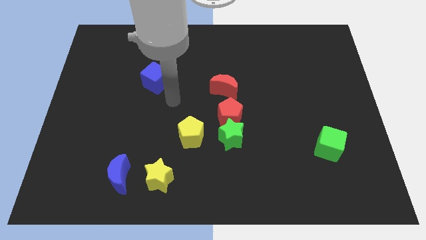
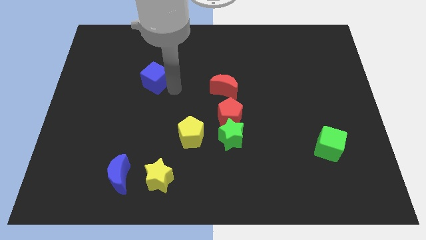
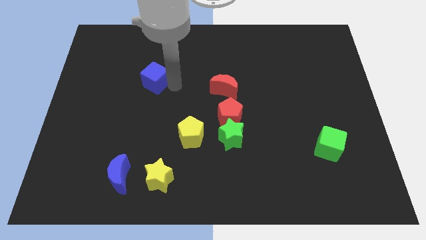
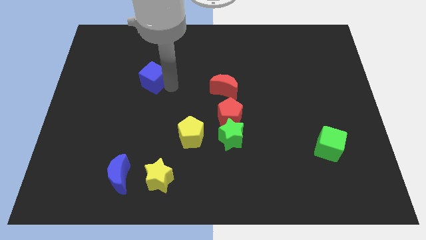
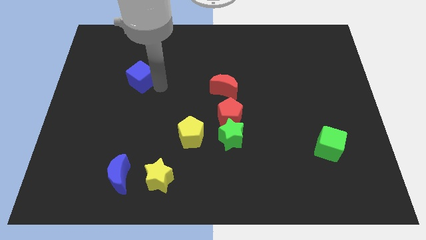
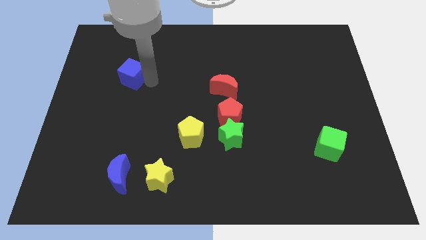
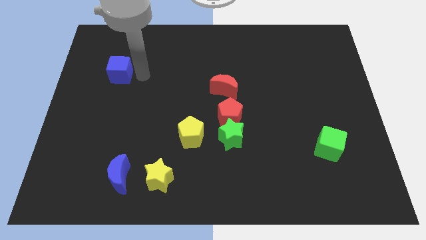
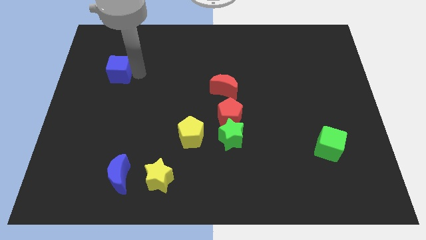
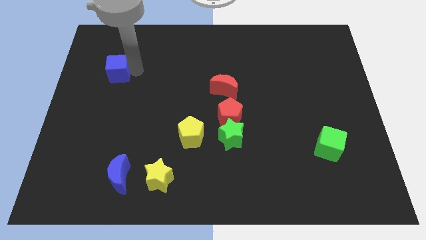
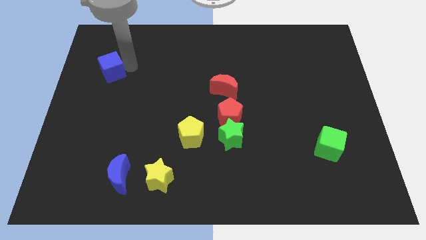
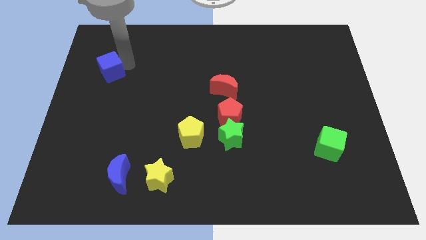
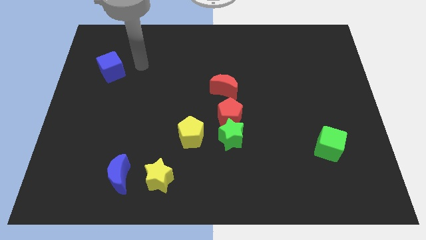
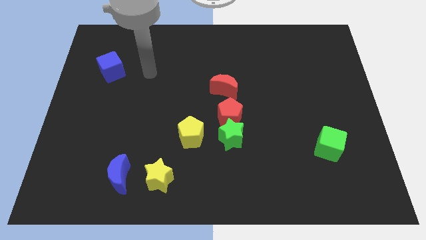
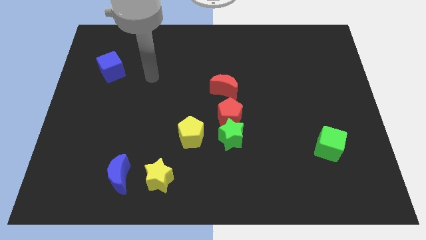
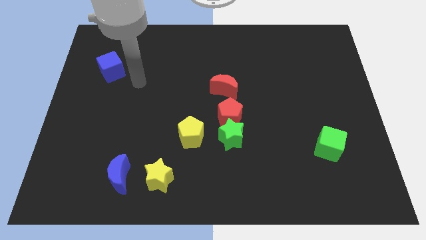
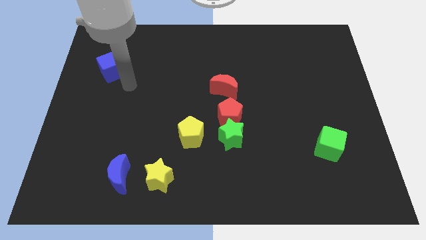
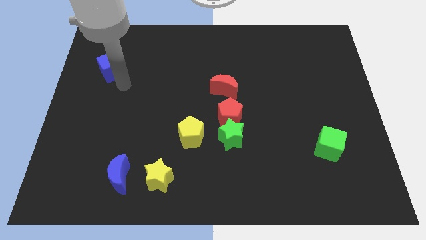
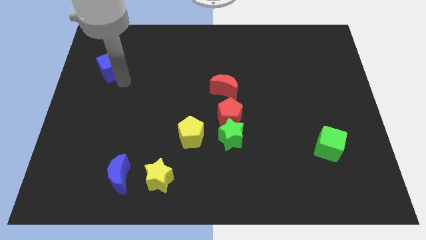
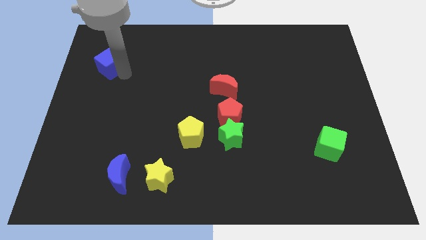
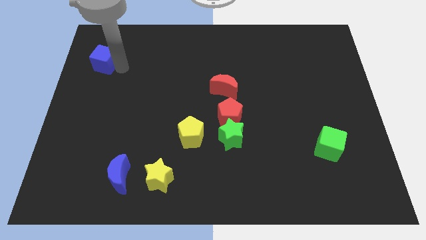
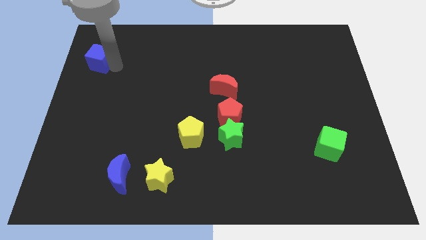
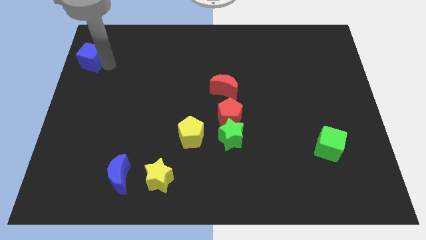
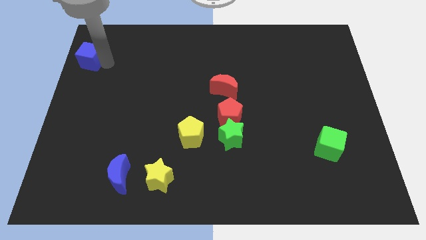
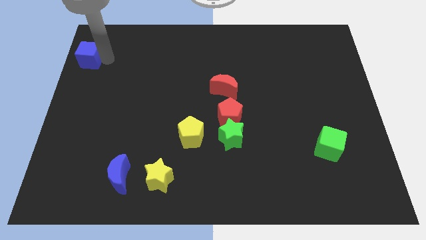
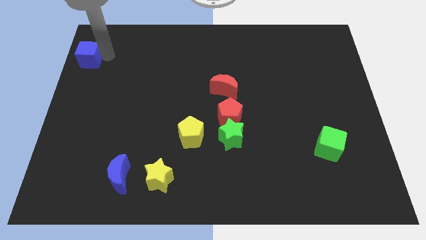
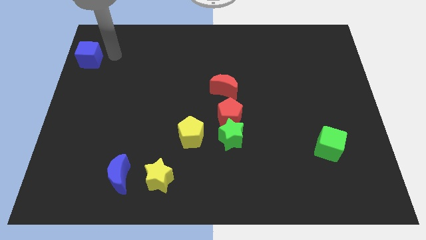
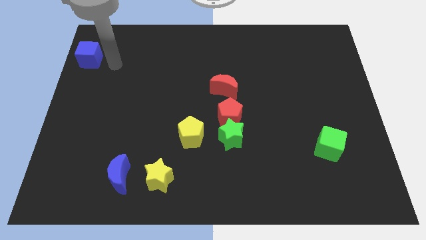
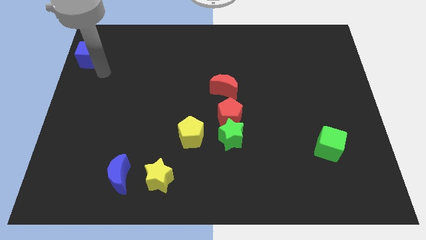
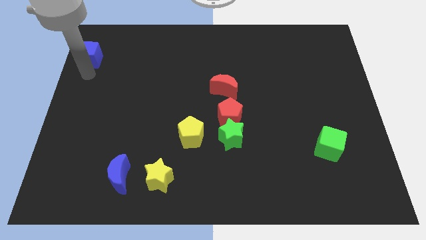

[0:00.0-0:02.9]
slide the blue cube to the top left

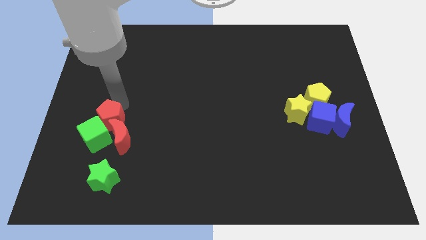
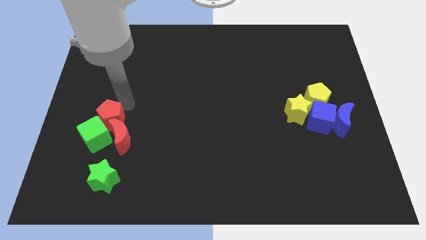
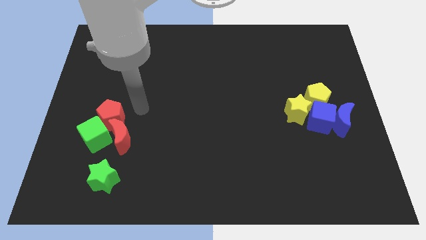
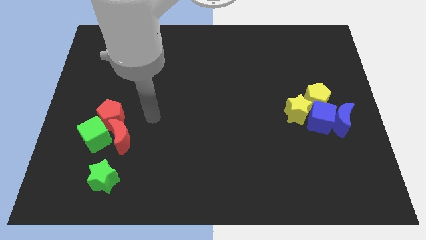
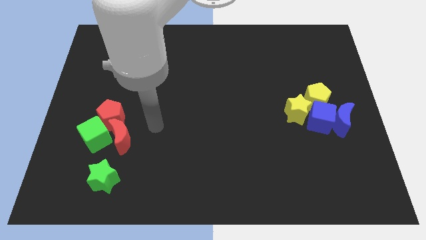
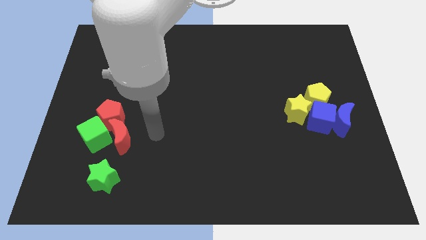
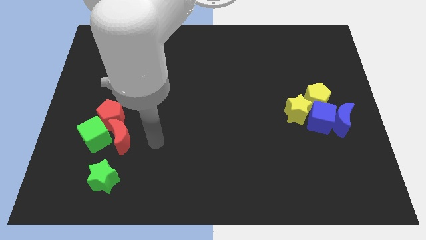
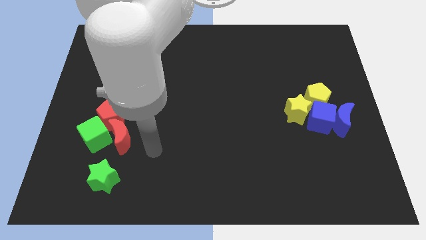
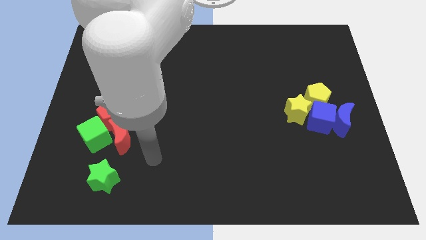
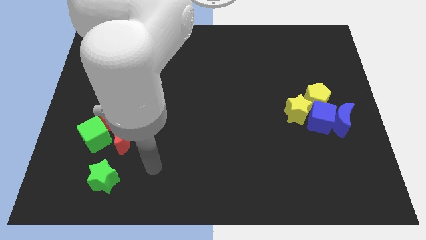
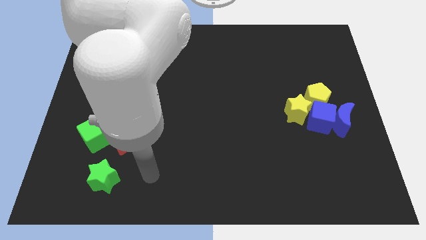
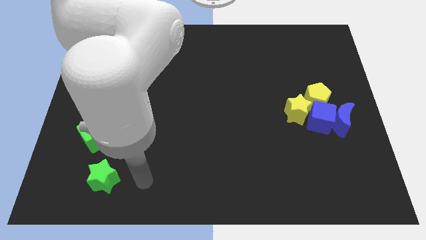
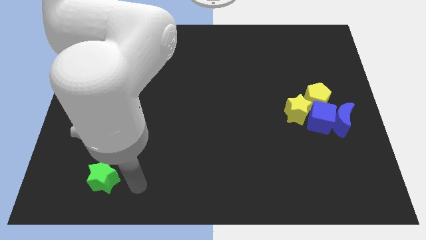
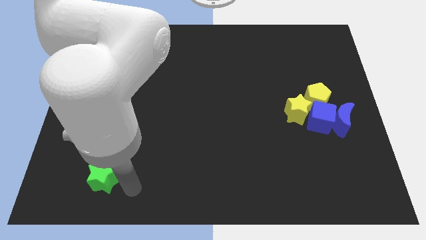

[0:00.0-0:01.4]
move your hand towards the right of the green star

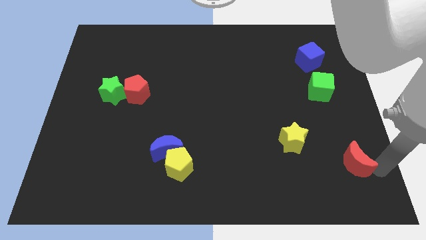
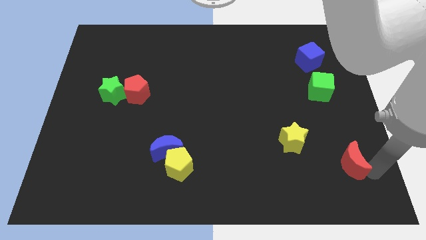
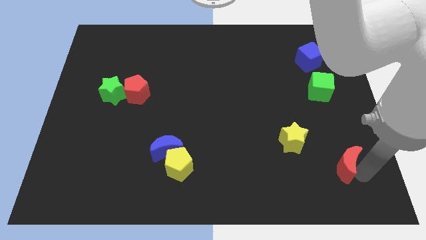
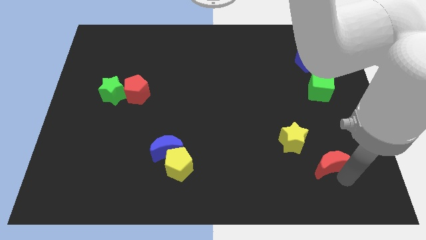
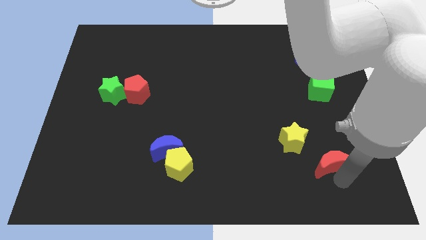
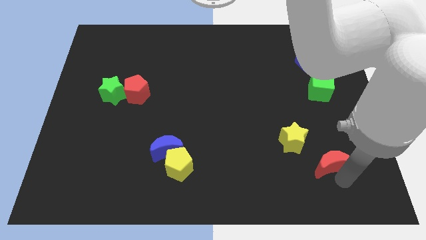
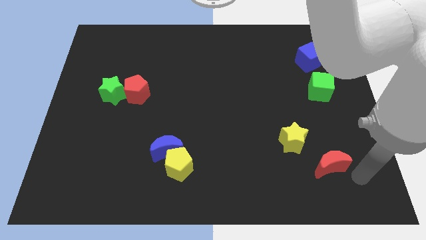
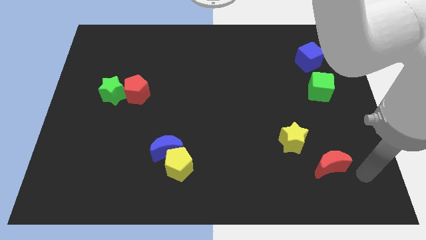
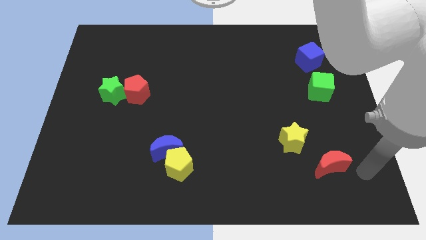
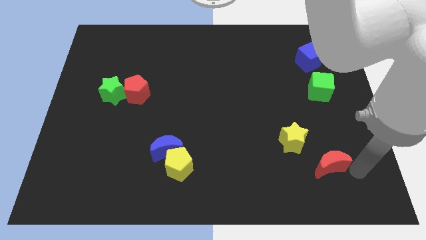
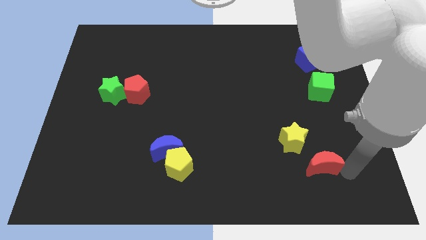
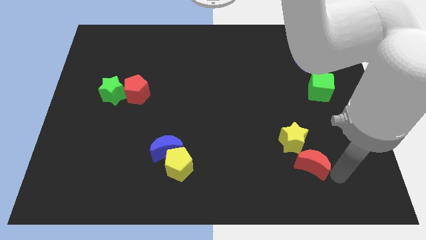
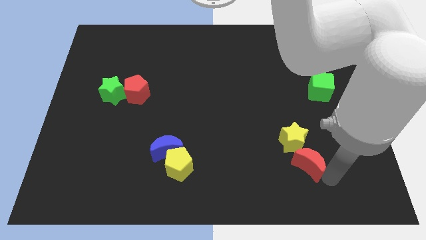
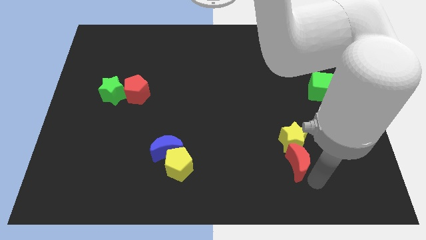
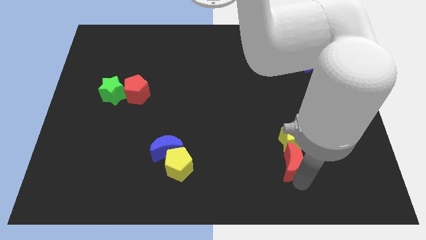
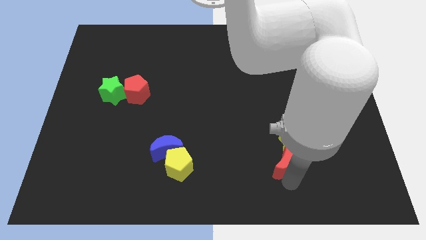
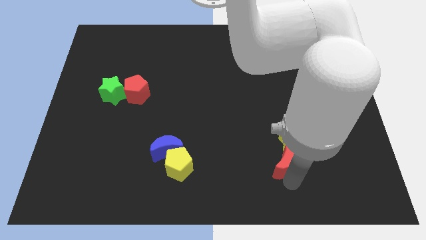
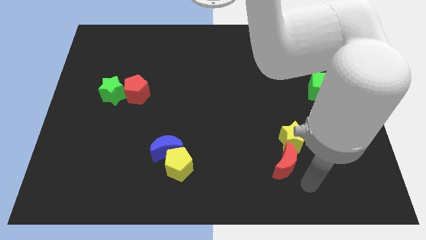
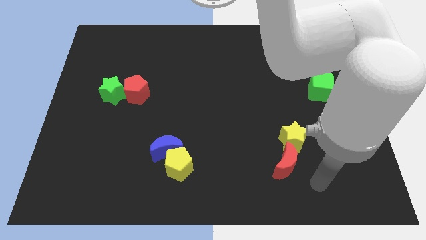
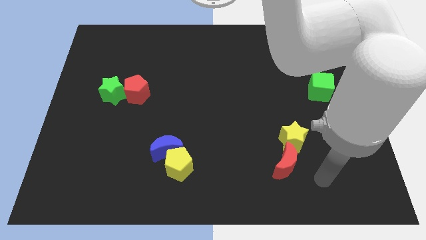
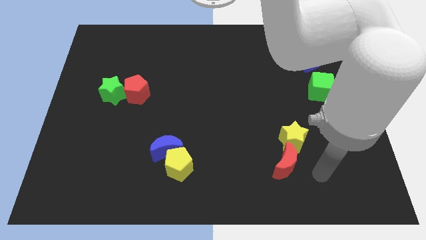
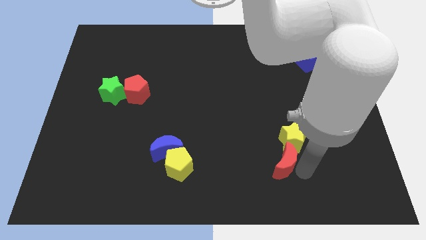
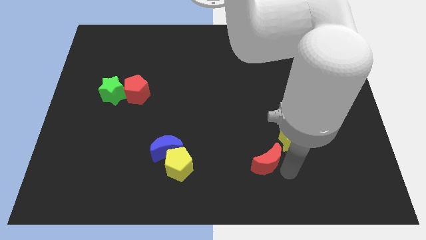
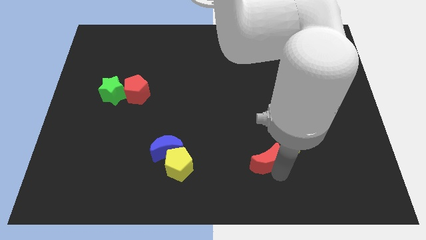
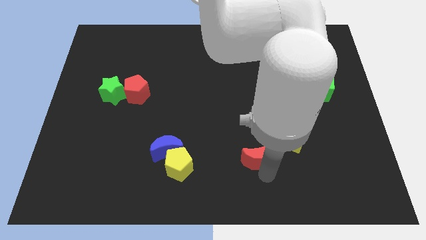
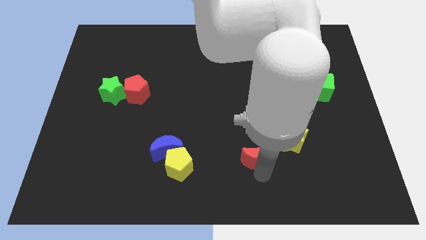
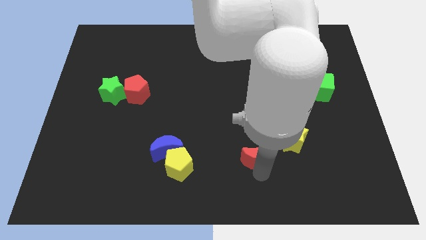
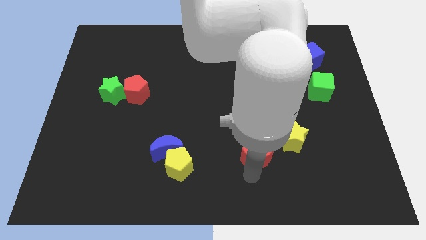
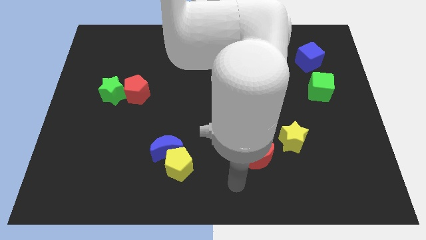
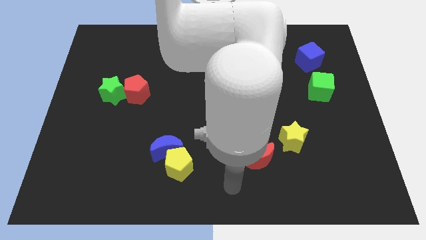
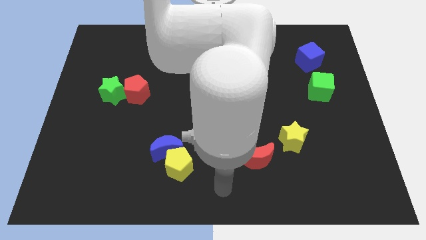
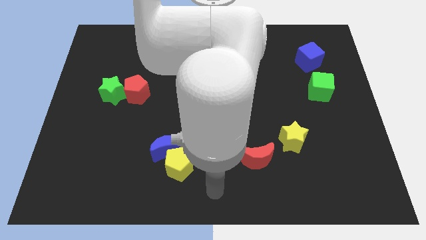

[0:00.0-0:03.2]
move red moon parallel to blue moon

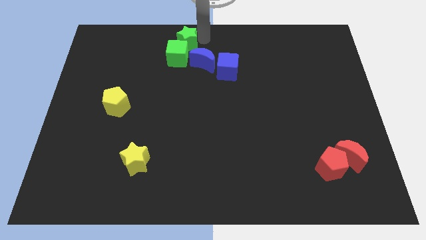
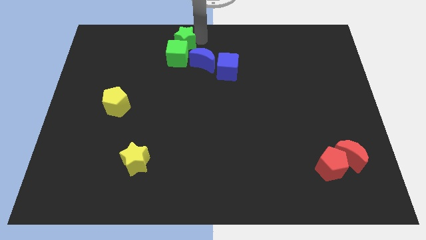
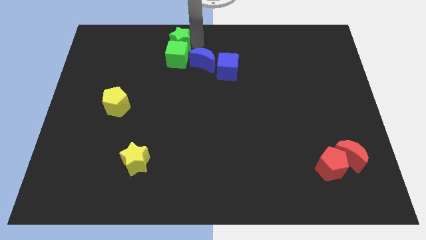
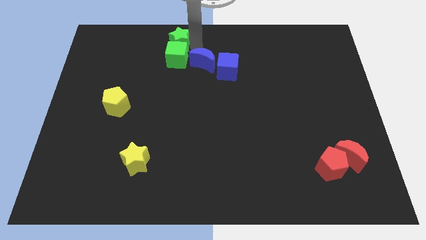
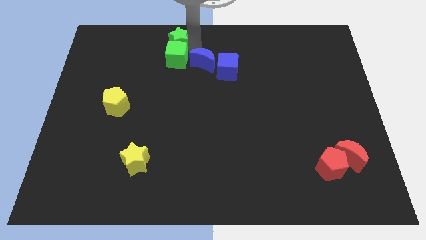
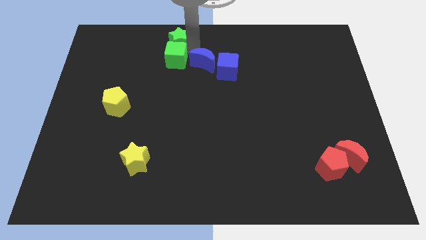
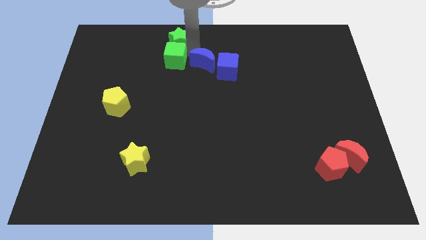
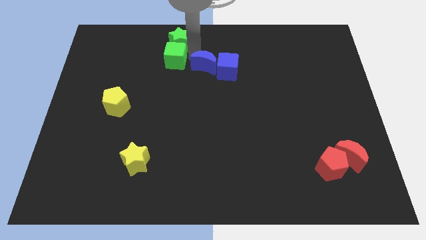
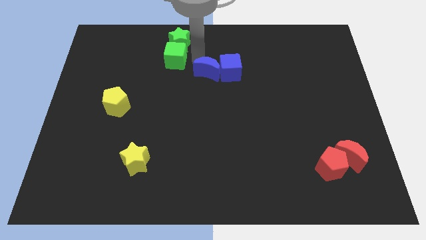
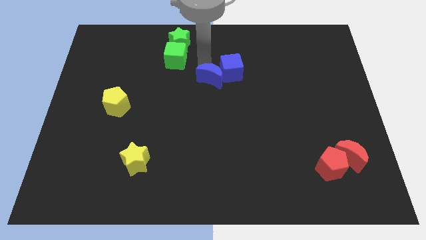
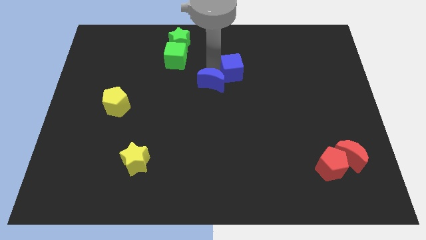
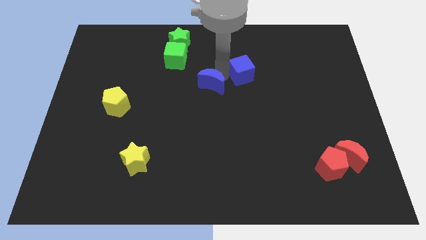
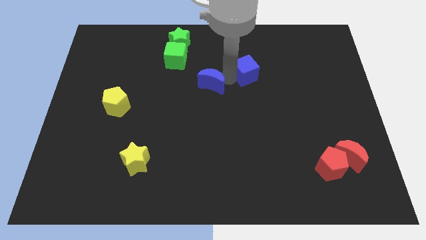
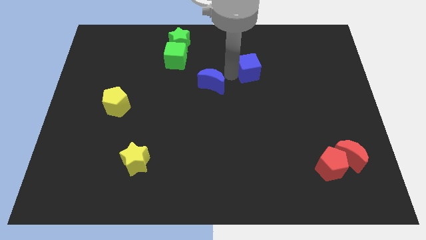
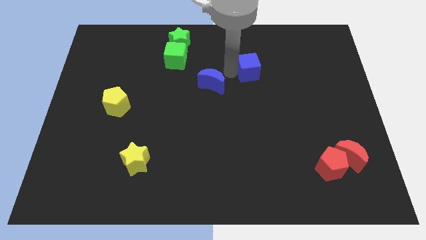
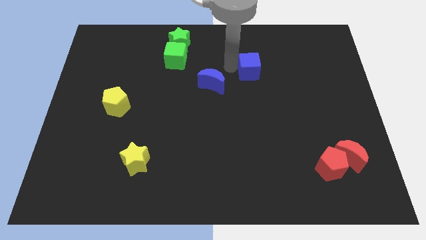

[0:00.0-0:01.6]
separate blue cube from blue crescent
